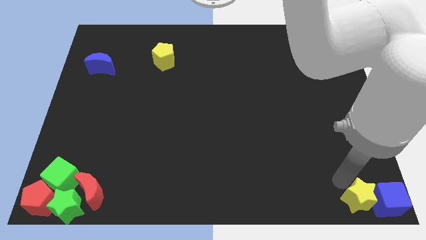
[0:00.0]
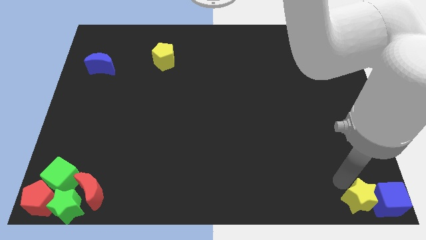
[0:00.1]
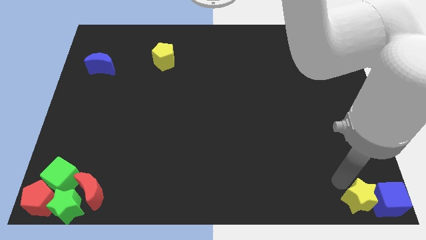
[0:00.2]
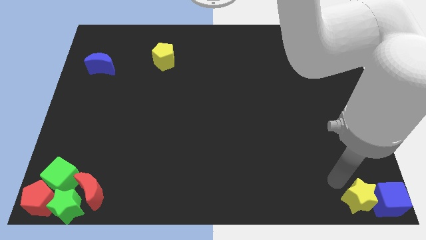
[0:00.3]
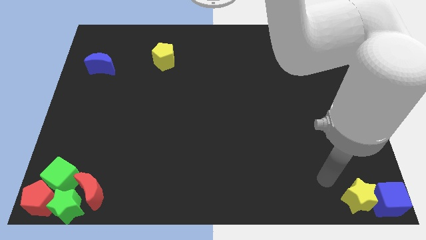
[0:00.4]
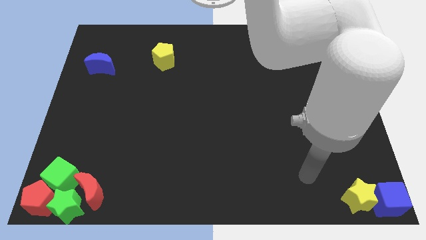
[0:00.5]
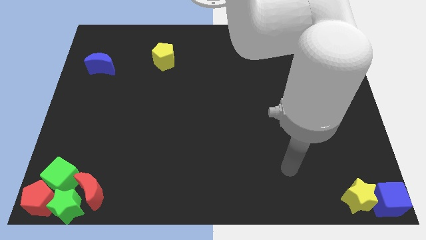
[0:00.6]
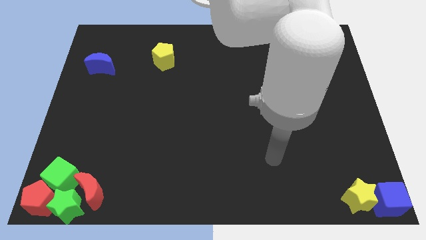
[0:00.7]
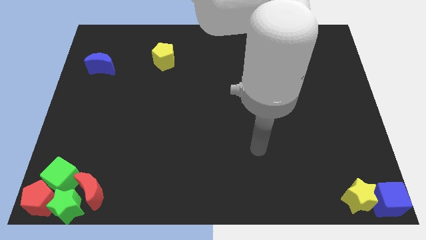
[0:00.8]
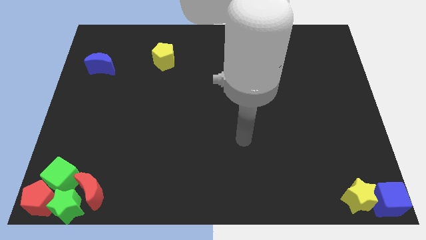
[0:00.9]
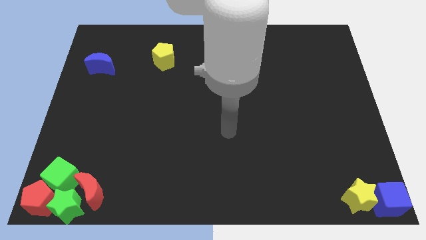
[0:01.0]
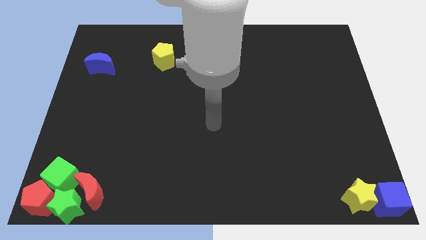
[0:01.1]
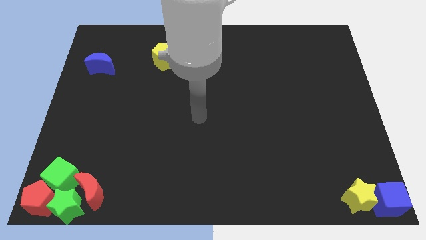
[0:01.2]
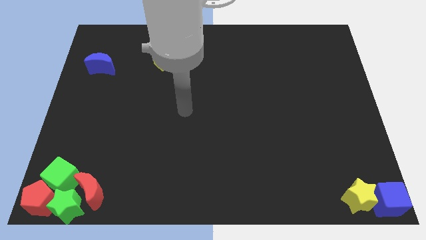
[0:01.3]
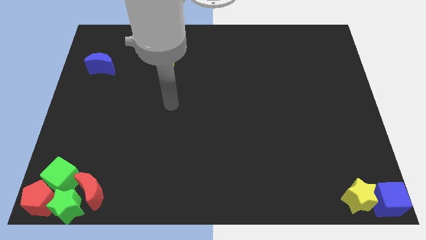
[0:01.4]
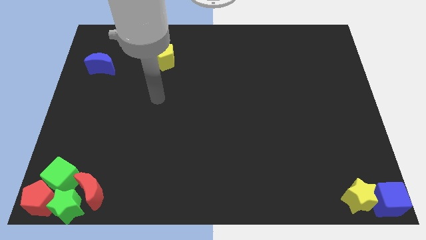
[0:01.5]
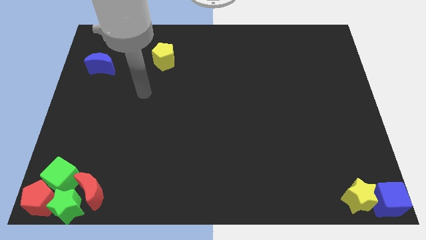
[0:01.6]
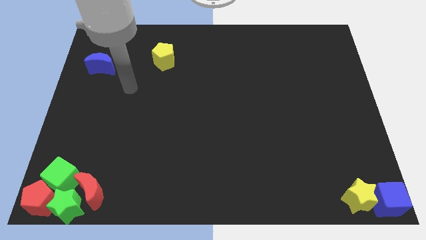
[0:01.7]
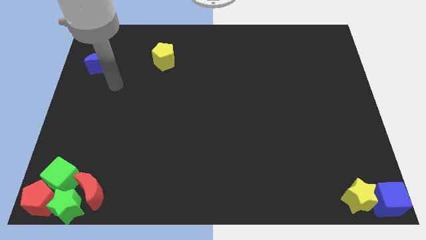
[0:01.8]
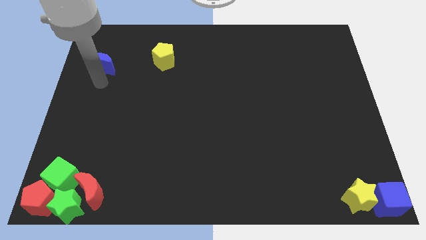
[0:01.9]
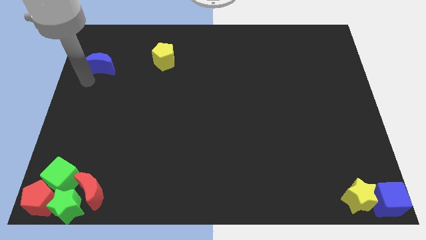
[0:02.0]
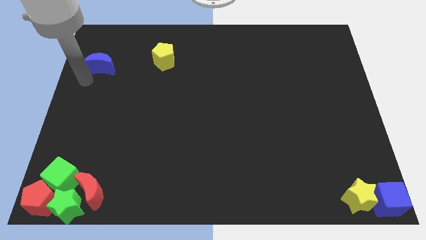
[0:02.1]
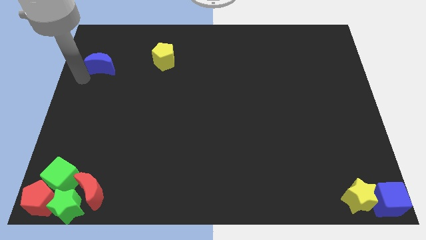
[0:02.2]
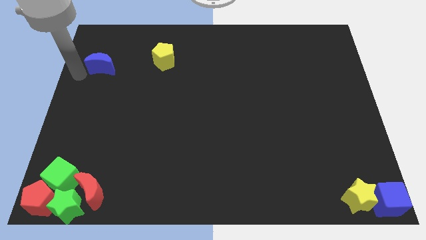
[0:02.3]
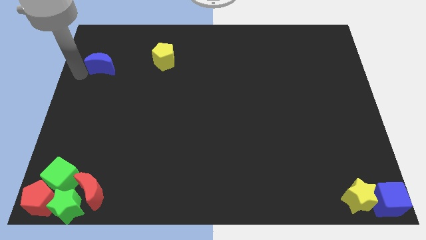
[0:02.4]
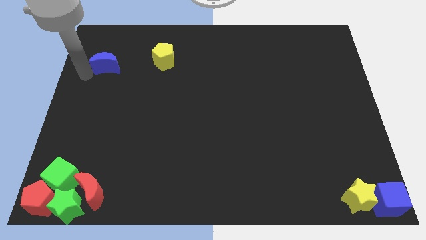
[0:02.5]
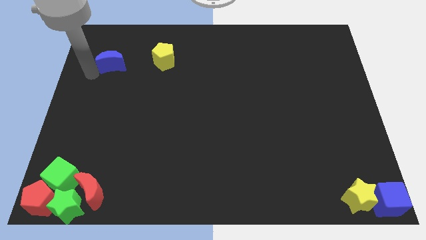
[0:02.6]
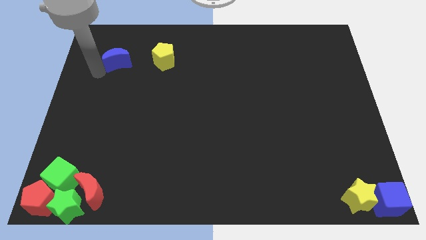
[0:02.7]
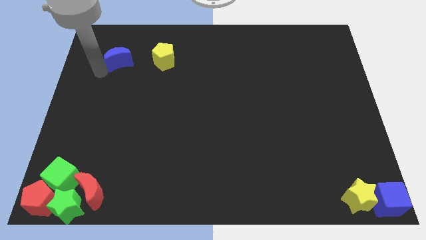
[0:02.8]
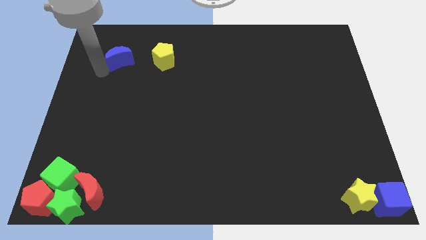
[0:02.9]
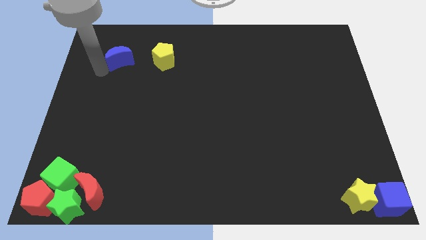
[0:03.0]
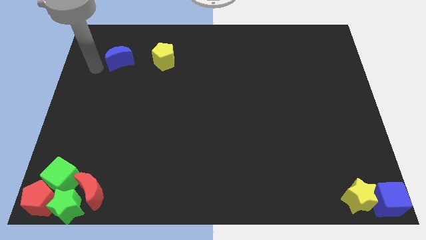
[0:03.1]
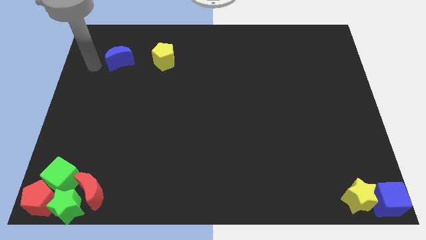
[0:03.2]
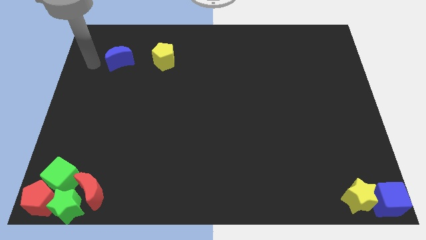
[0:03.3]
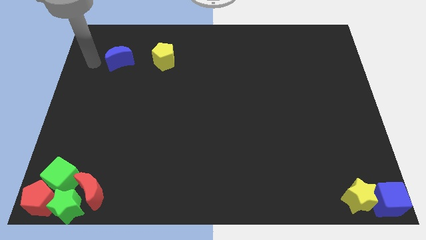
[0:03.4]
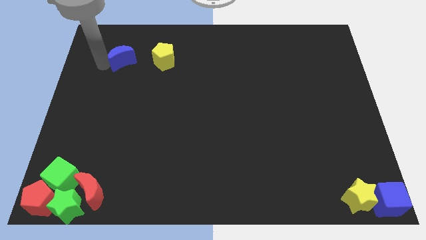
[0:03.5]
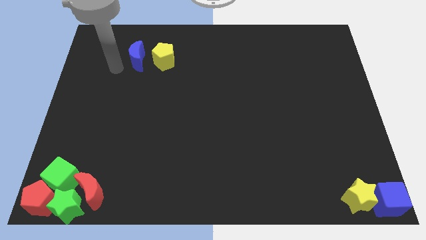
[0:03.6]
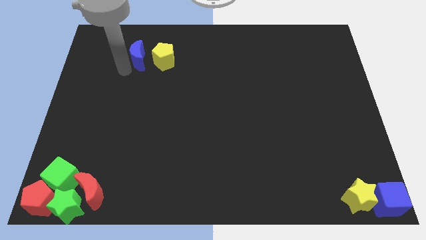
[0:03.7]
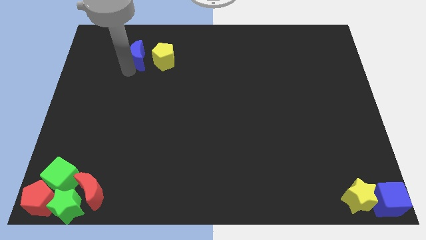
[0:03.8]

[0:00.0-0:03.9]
move the blue moon to the left of the yellow pentagon

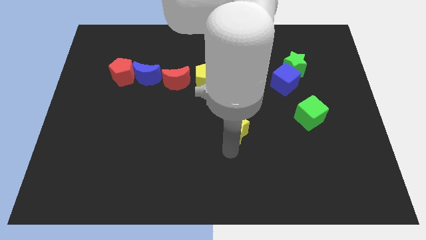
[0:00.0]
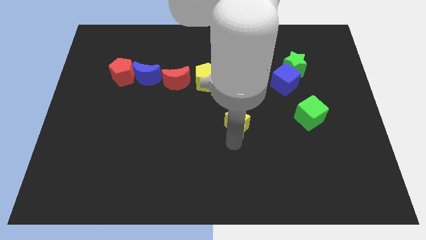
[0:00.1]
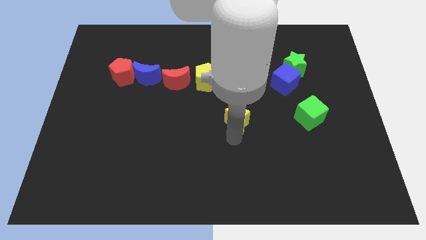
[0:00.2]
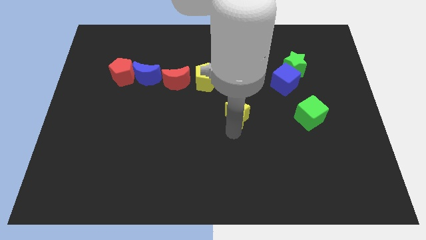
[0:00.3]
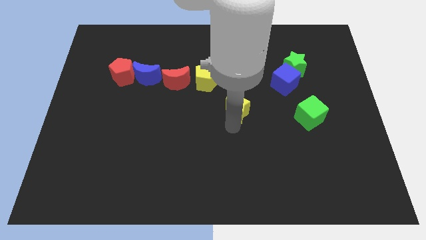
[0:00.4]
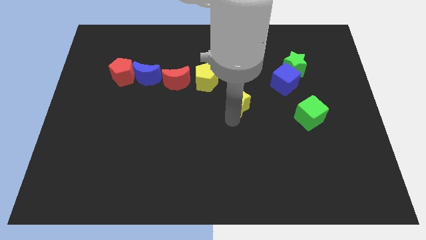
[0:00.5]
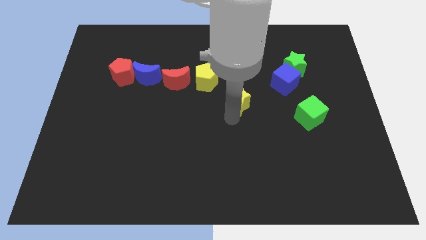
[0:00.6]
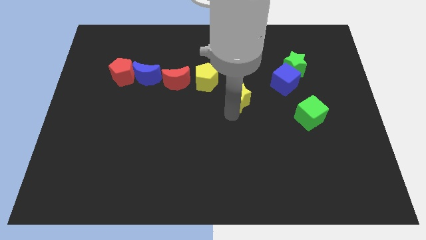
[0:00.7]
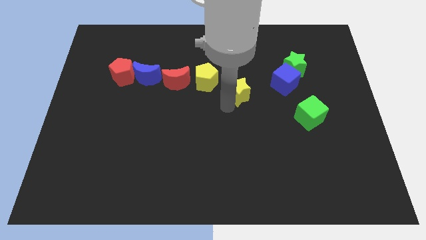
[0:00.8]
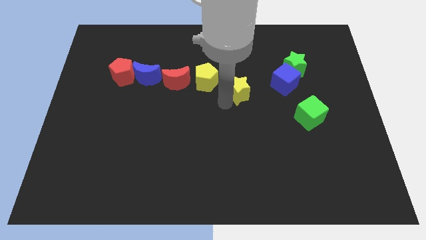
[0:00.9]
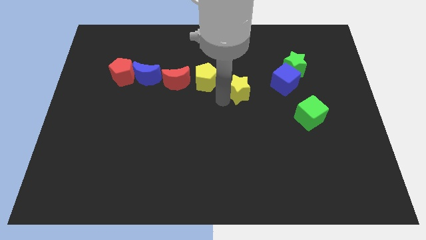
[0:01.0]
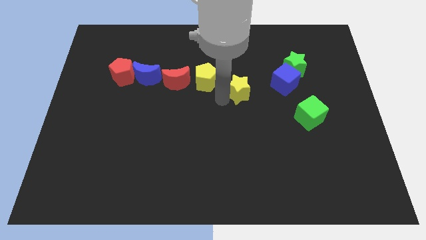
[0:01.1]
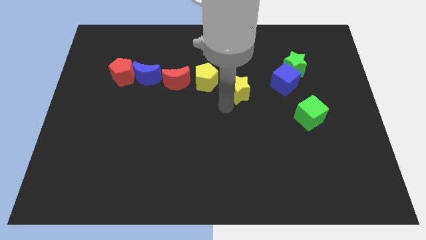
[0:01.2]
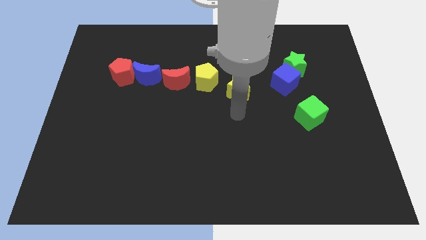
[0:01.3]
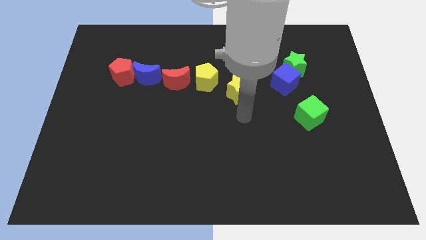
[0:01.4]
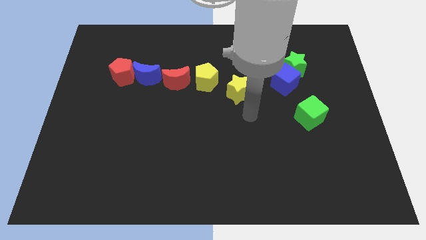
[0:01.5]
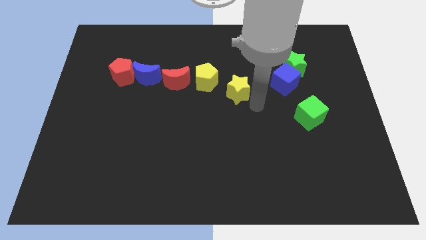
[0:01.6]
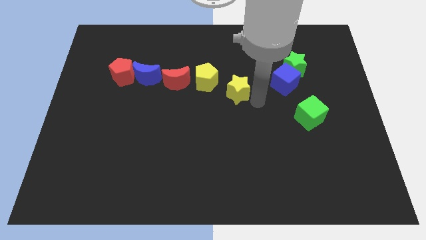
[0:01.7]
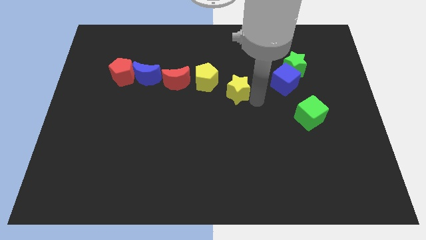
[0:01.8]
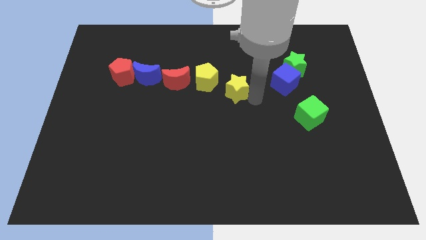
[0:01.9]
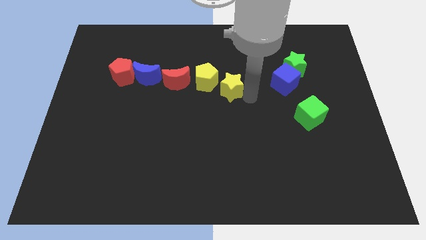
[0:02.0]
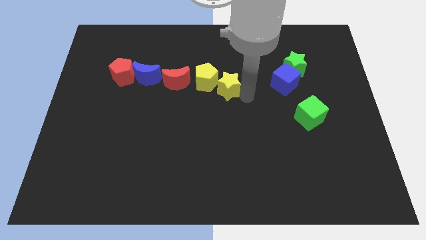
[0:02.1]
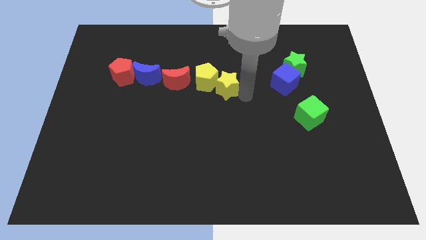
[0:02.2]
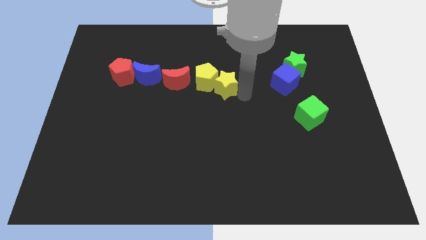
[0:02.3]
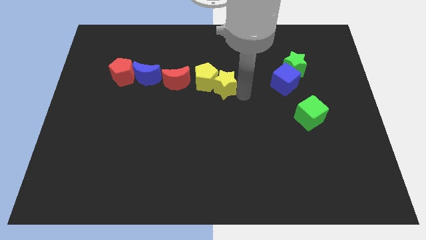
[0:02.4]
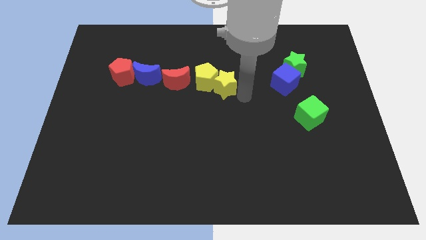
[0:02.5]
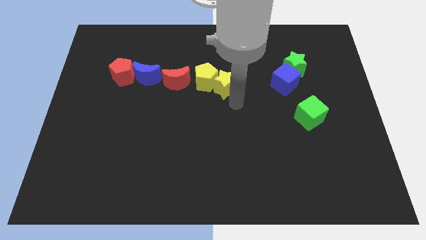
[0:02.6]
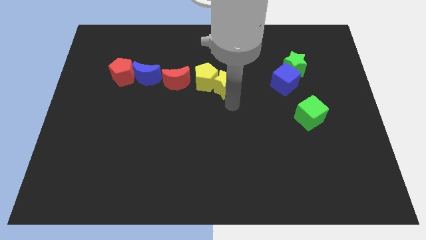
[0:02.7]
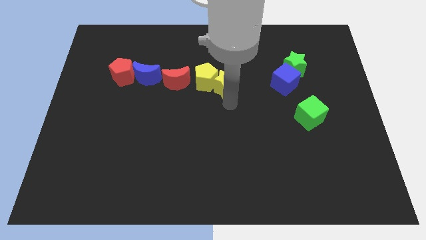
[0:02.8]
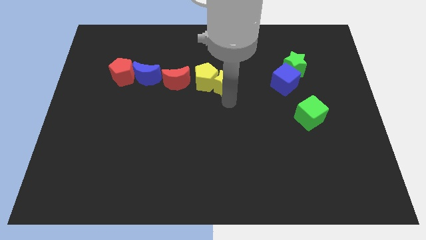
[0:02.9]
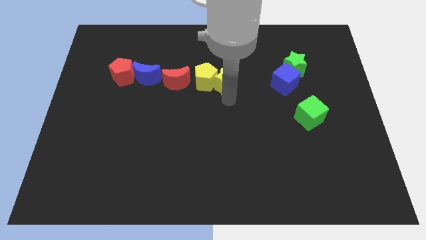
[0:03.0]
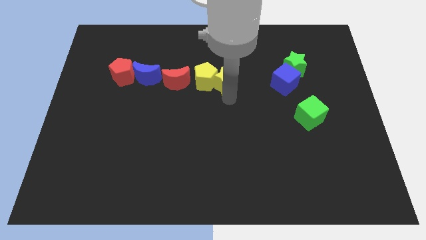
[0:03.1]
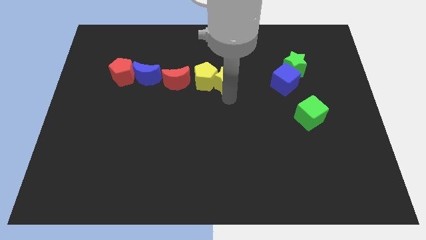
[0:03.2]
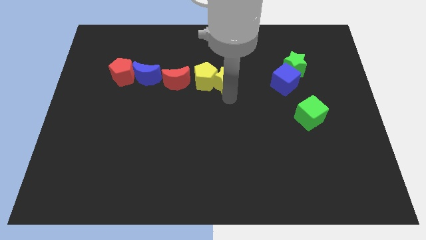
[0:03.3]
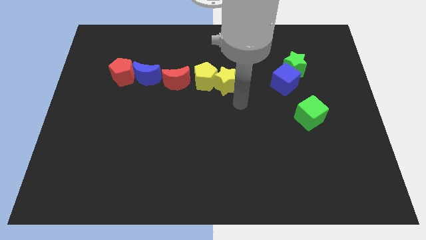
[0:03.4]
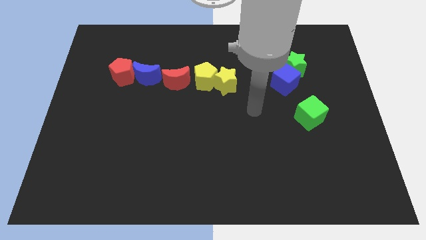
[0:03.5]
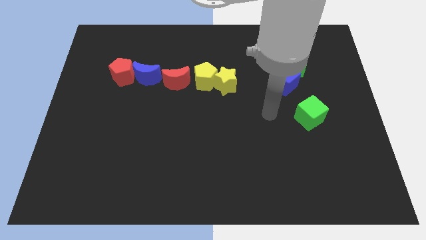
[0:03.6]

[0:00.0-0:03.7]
move the yellow star to the right side of the yellow pentagon

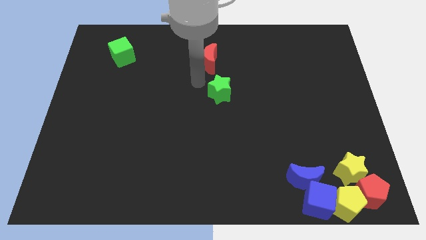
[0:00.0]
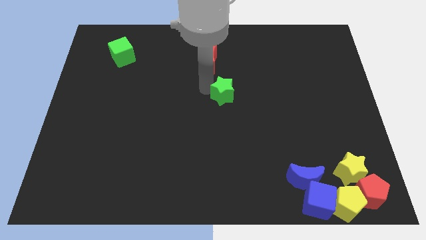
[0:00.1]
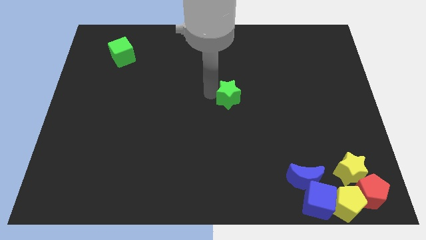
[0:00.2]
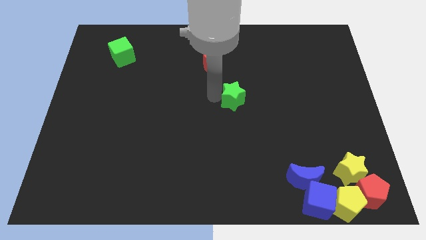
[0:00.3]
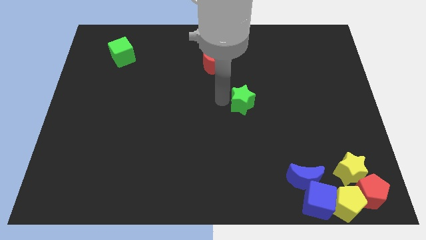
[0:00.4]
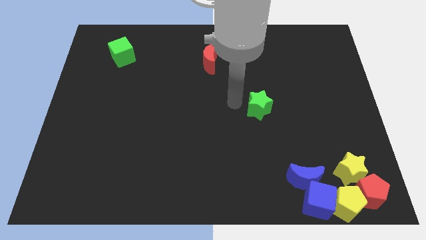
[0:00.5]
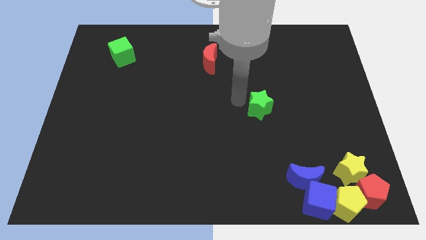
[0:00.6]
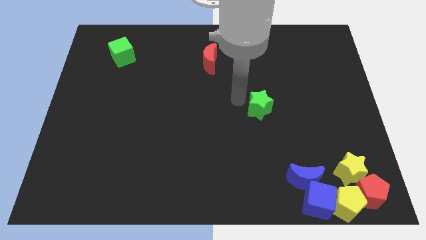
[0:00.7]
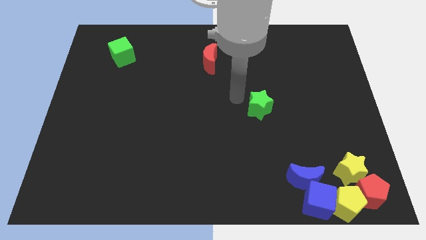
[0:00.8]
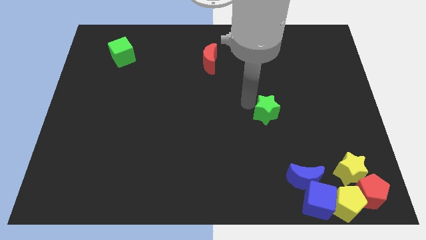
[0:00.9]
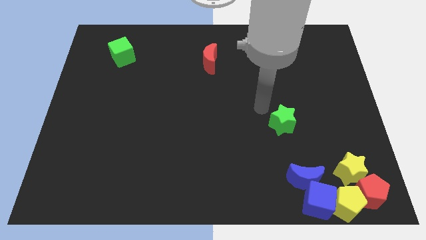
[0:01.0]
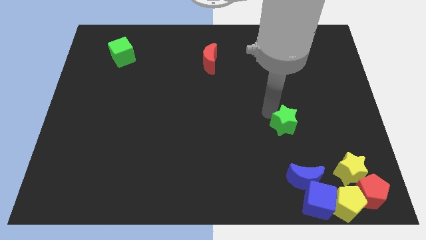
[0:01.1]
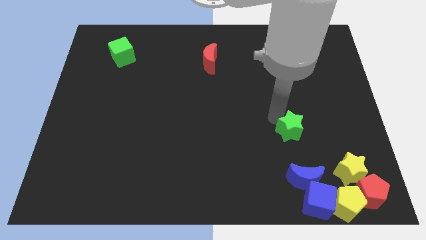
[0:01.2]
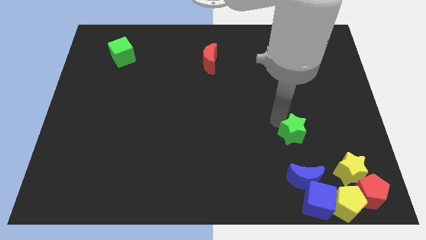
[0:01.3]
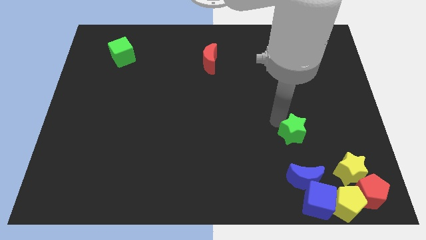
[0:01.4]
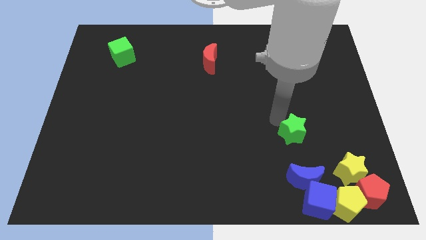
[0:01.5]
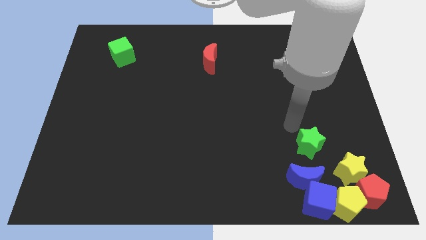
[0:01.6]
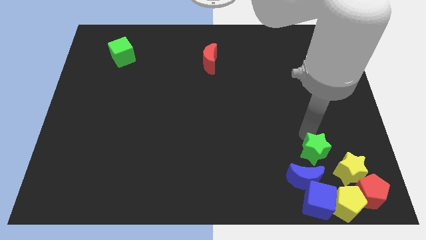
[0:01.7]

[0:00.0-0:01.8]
push the green star close to the blue semi circle
